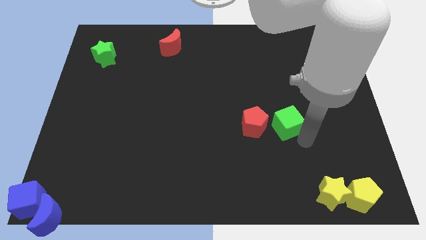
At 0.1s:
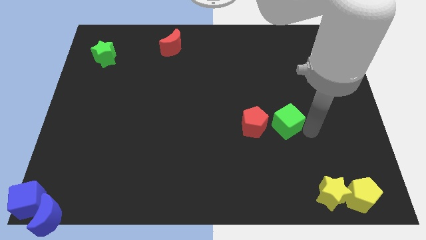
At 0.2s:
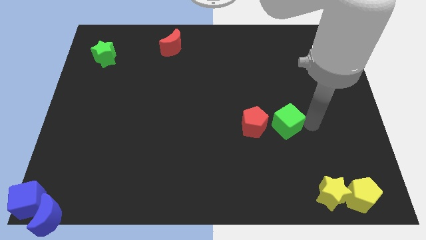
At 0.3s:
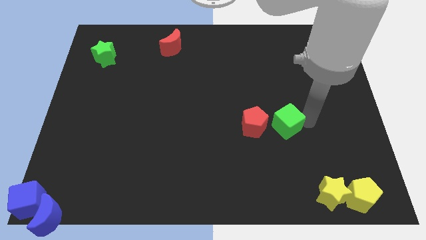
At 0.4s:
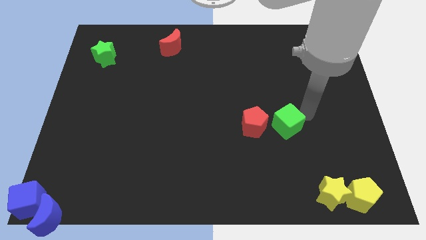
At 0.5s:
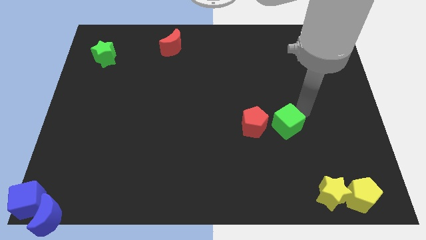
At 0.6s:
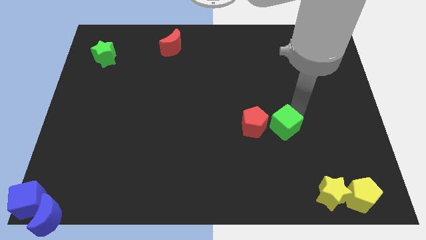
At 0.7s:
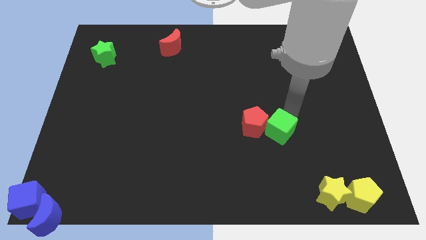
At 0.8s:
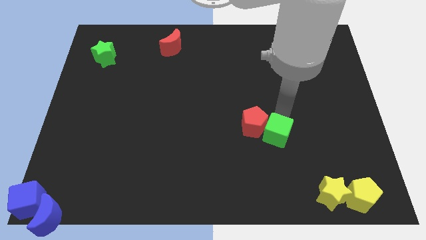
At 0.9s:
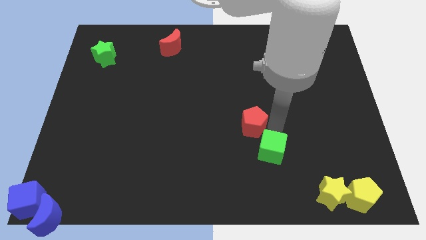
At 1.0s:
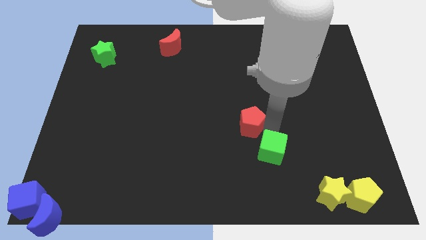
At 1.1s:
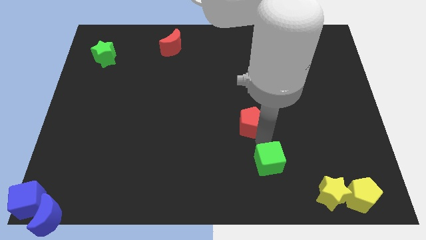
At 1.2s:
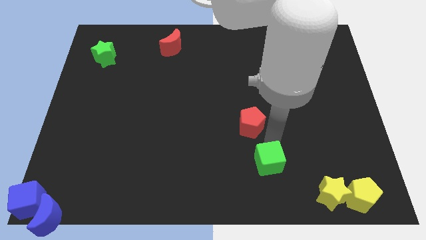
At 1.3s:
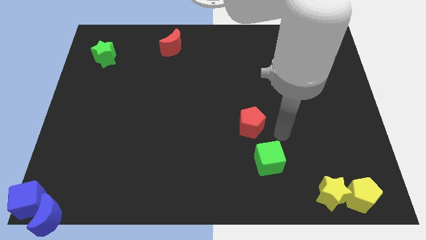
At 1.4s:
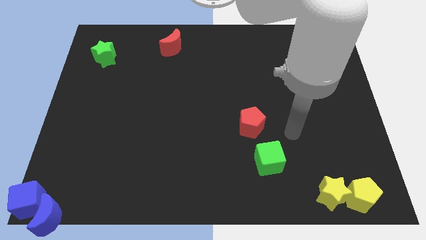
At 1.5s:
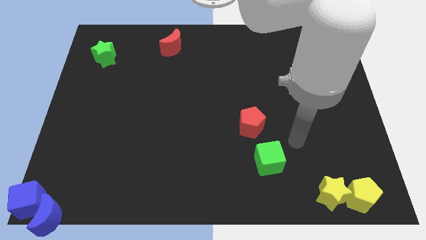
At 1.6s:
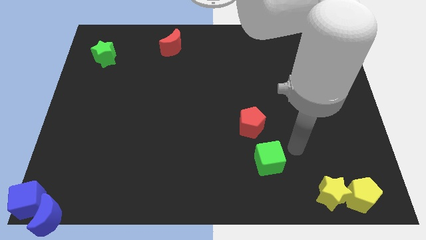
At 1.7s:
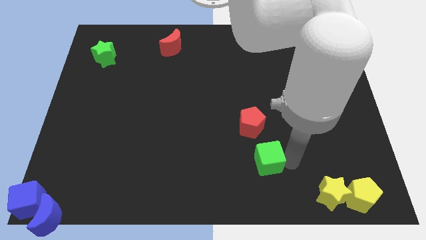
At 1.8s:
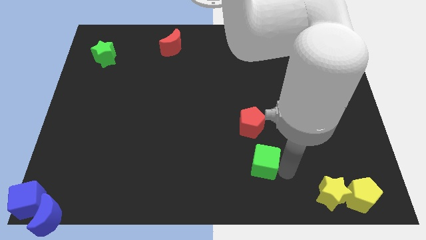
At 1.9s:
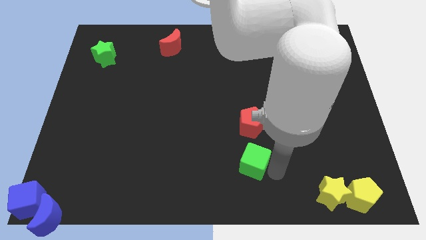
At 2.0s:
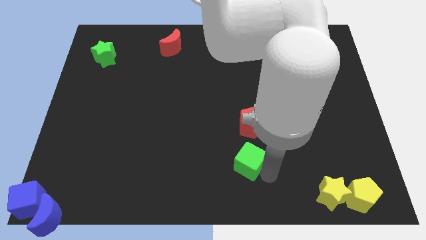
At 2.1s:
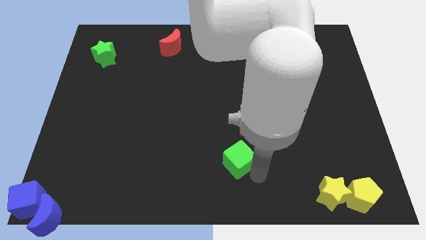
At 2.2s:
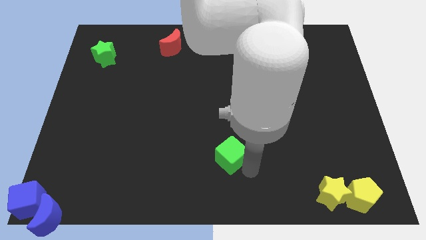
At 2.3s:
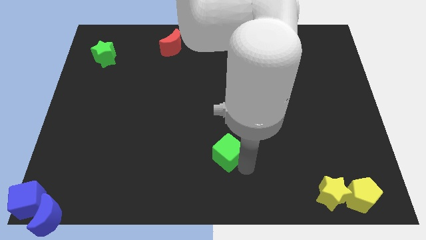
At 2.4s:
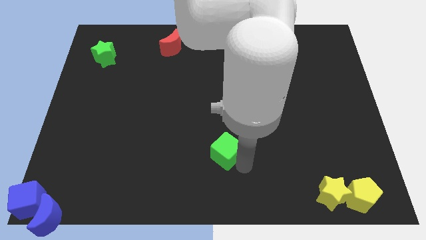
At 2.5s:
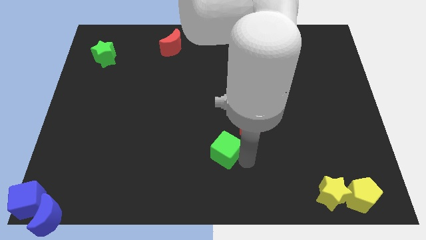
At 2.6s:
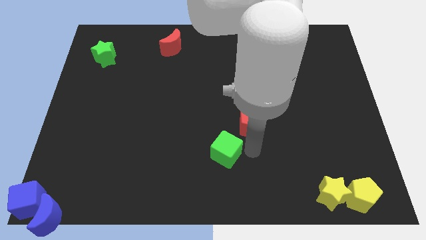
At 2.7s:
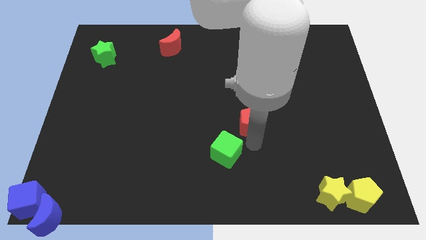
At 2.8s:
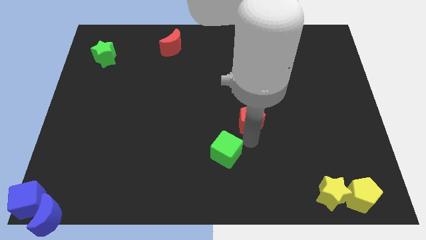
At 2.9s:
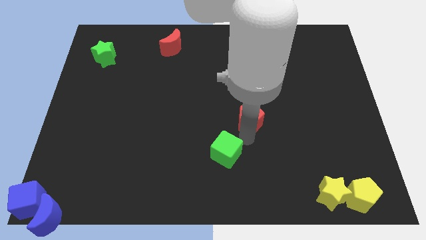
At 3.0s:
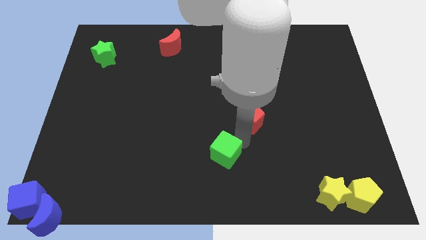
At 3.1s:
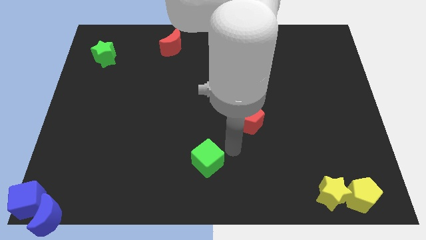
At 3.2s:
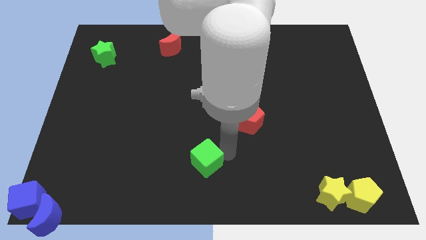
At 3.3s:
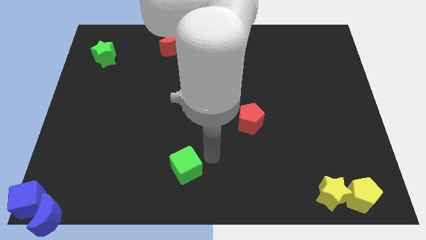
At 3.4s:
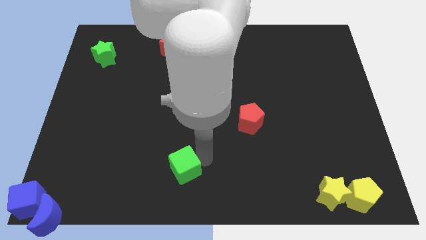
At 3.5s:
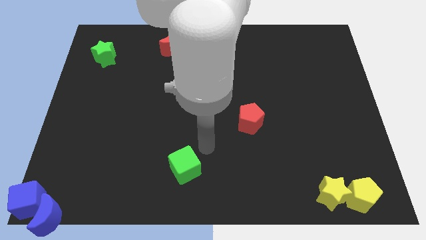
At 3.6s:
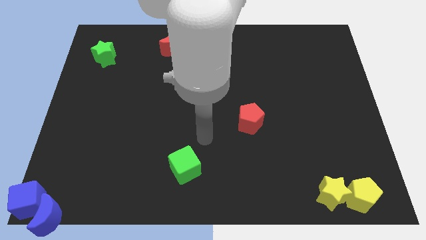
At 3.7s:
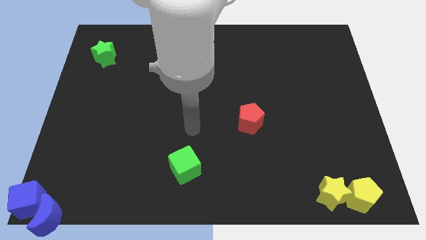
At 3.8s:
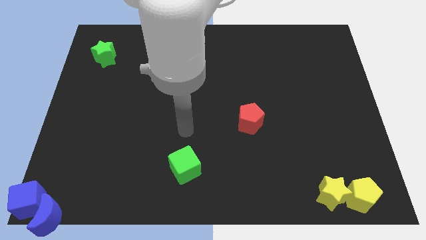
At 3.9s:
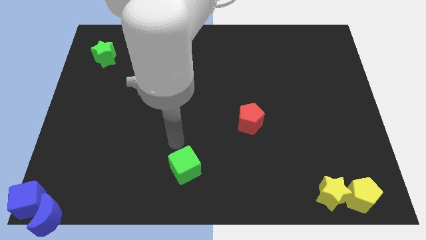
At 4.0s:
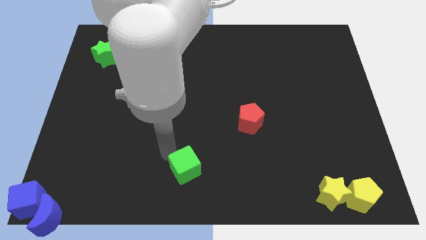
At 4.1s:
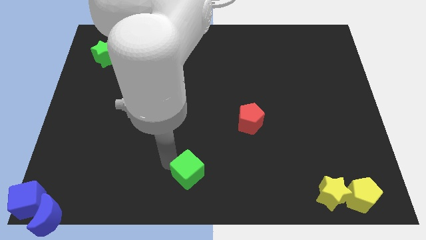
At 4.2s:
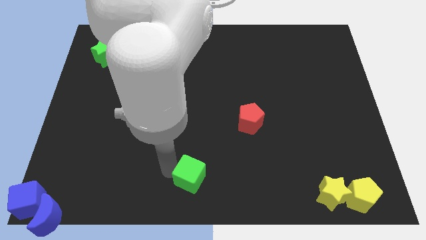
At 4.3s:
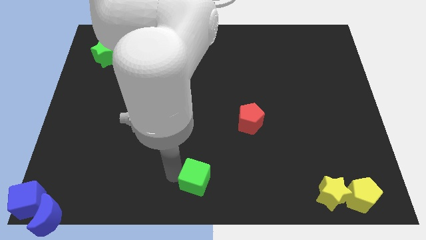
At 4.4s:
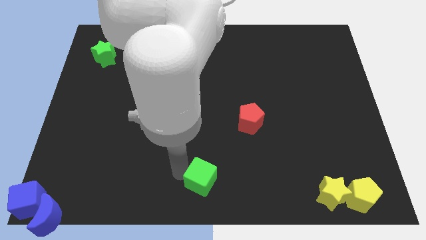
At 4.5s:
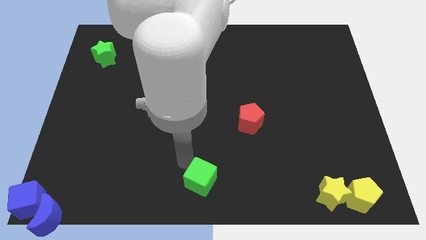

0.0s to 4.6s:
place the green cube at the bottom center of the board

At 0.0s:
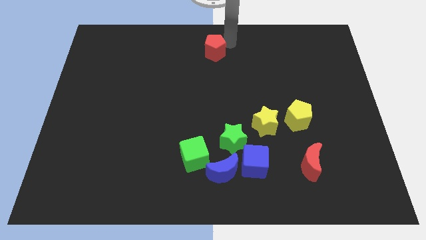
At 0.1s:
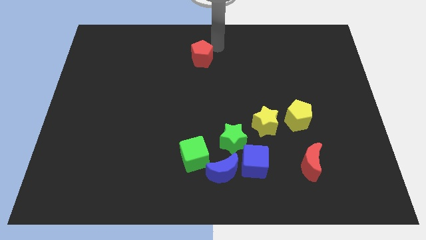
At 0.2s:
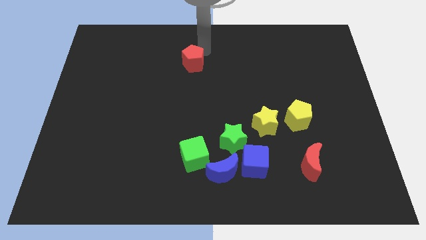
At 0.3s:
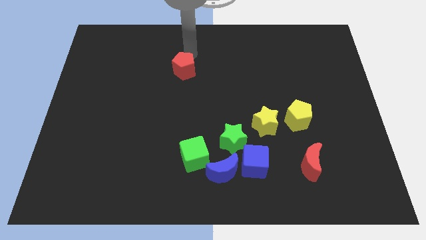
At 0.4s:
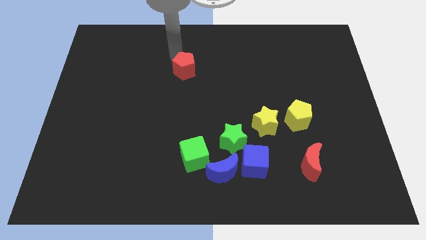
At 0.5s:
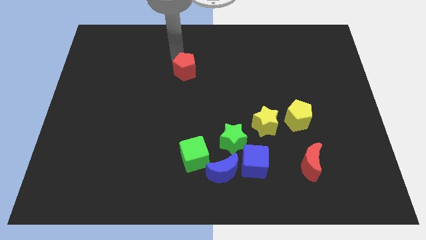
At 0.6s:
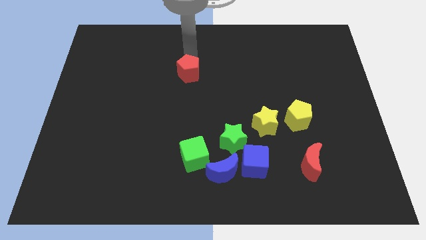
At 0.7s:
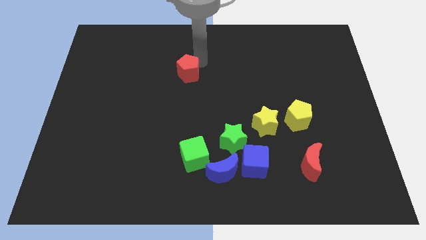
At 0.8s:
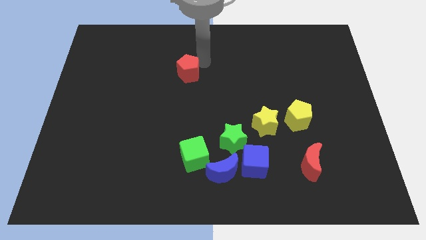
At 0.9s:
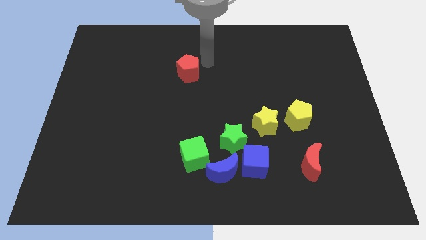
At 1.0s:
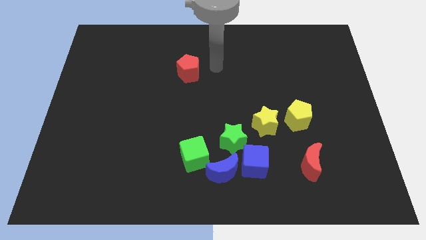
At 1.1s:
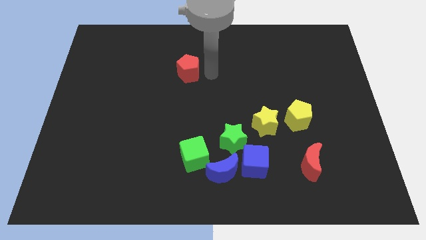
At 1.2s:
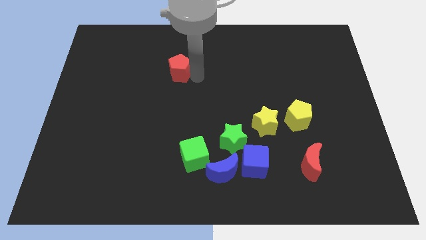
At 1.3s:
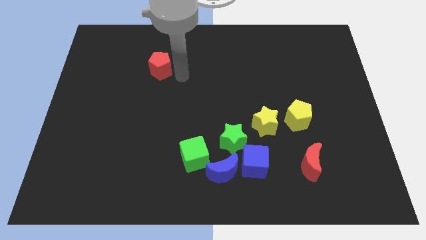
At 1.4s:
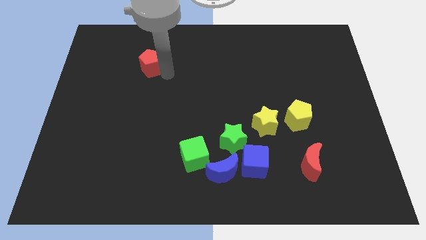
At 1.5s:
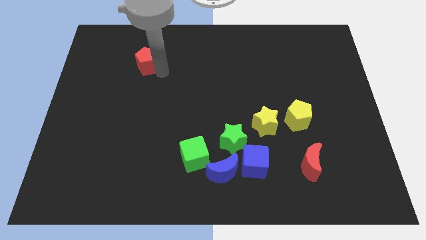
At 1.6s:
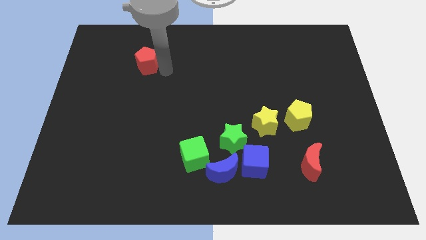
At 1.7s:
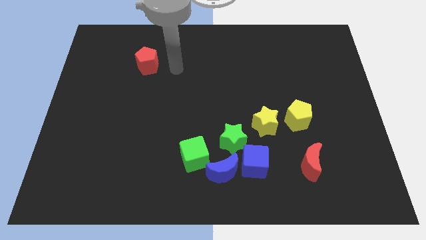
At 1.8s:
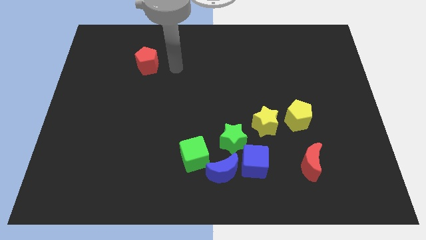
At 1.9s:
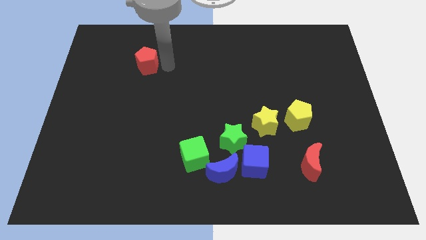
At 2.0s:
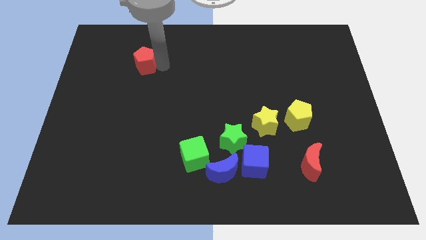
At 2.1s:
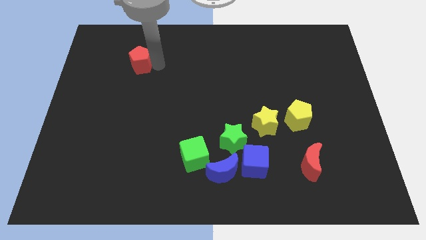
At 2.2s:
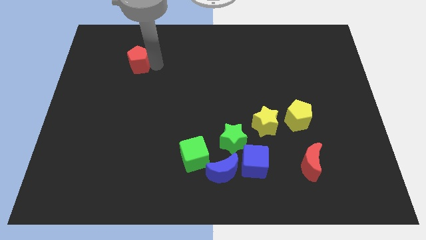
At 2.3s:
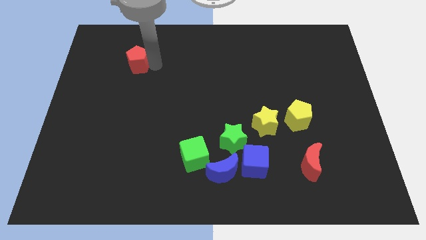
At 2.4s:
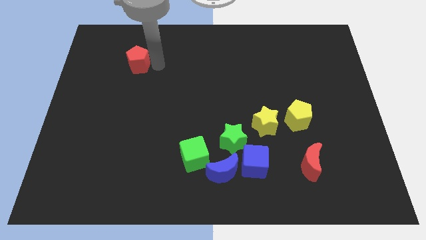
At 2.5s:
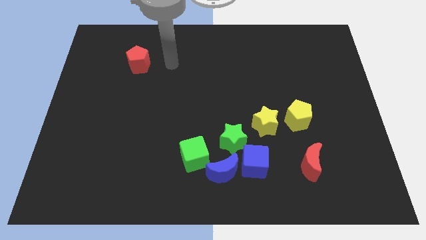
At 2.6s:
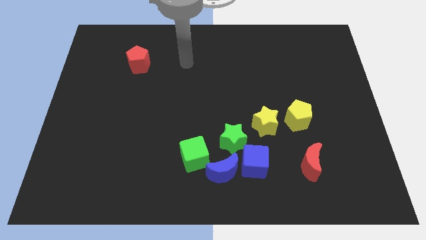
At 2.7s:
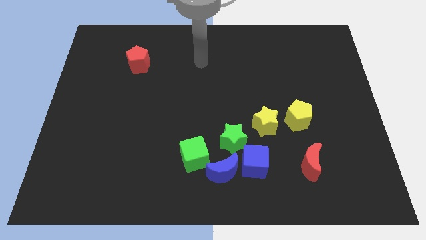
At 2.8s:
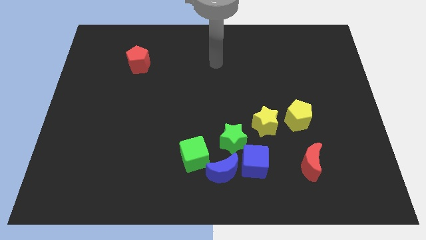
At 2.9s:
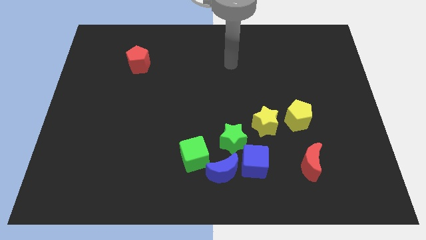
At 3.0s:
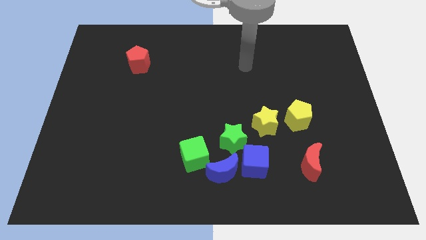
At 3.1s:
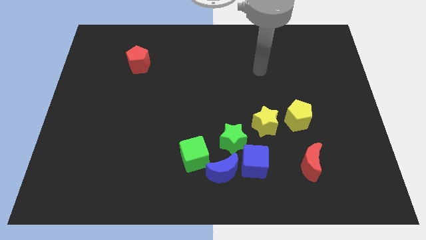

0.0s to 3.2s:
push the red pentagon towards the top left of the board

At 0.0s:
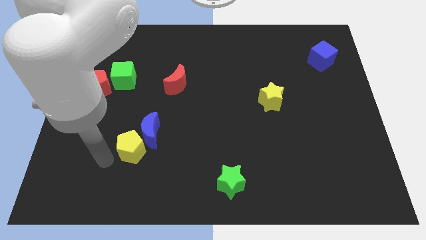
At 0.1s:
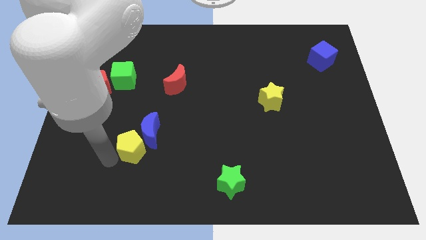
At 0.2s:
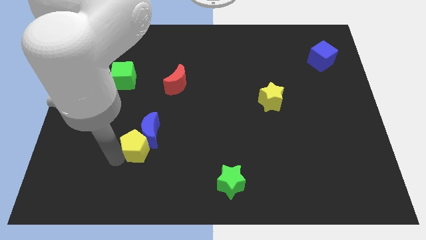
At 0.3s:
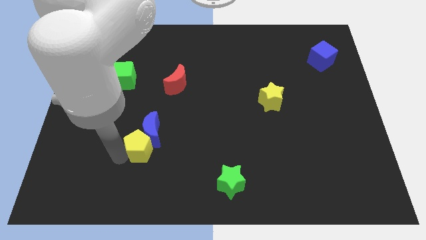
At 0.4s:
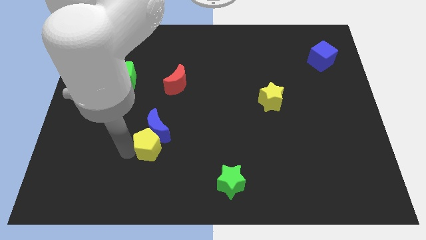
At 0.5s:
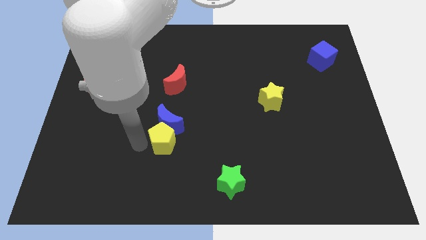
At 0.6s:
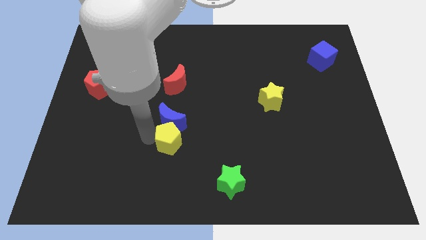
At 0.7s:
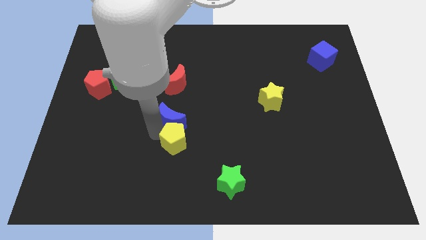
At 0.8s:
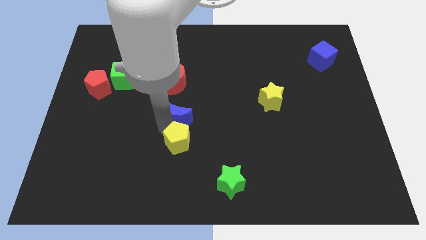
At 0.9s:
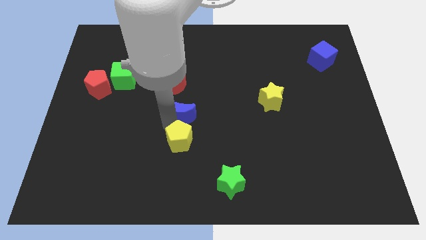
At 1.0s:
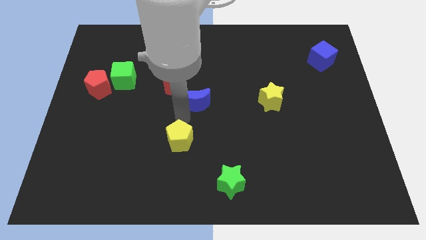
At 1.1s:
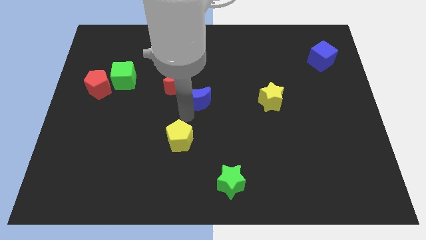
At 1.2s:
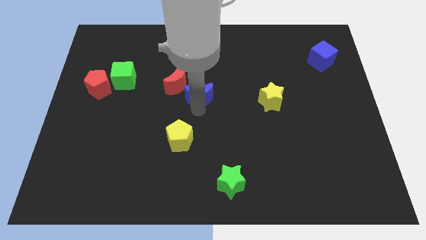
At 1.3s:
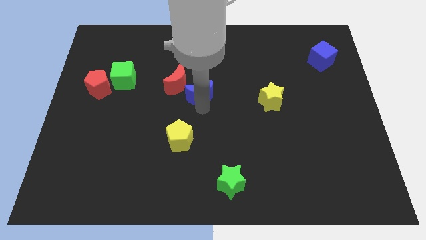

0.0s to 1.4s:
separate the yellow pentagon and the blue moon
